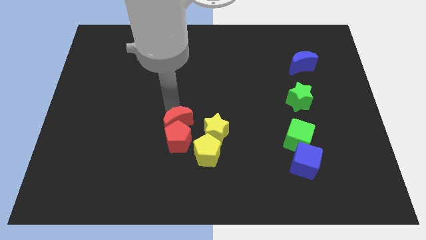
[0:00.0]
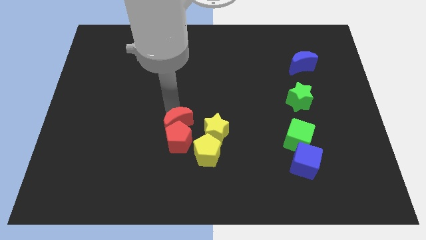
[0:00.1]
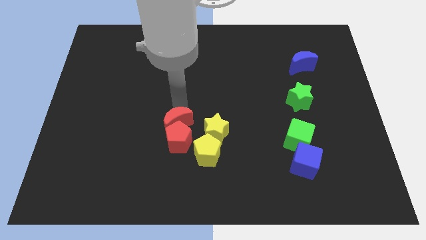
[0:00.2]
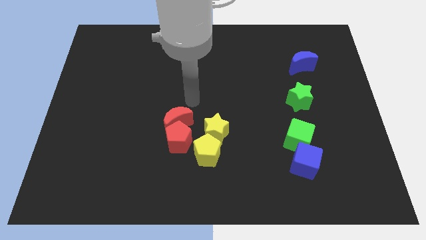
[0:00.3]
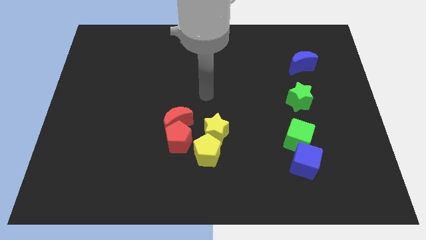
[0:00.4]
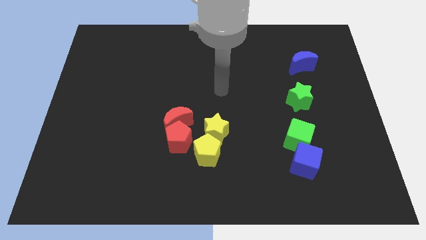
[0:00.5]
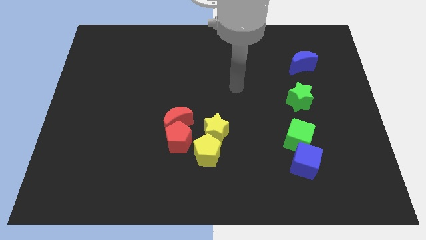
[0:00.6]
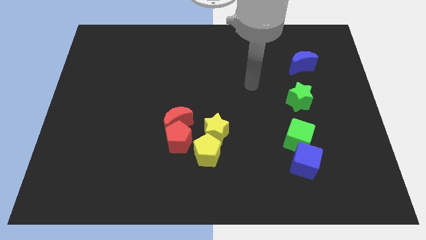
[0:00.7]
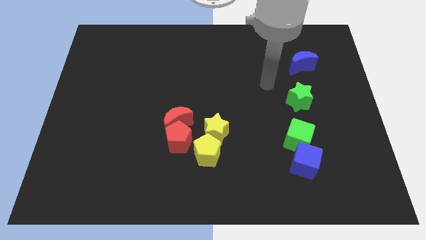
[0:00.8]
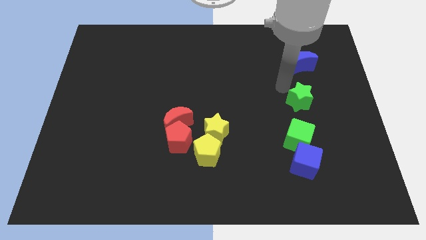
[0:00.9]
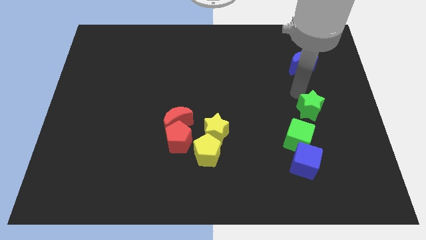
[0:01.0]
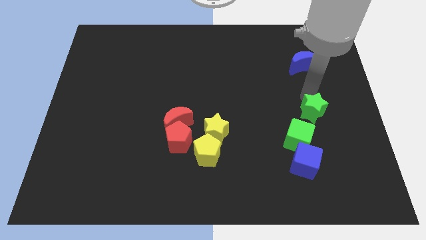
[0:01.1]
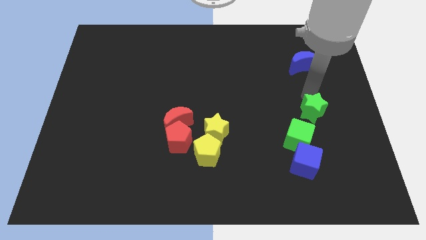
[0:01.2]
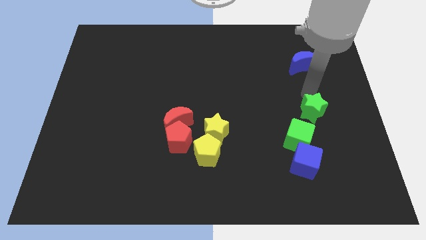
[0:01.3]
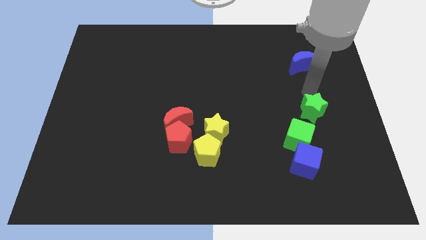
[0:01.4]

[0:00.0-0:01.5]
slightly push the green star to the bottom of the green cube

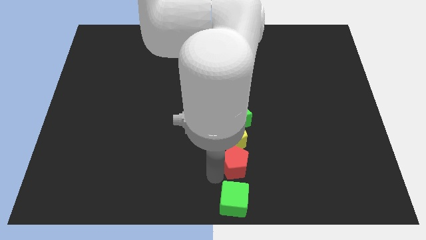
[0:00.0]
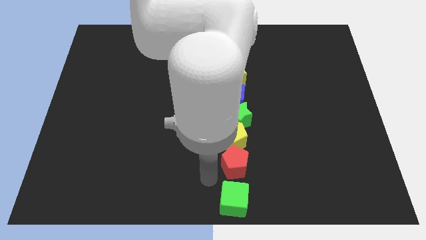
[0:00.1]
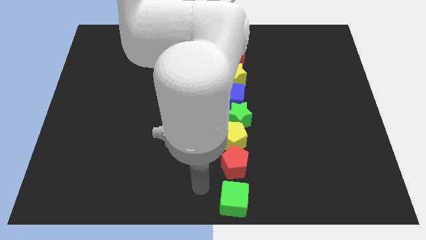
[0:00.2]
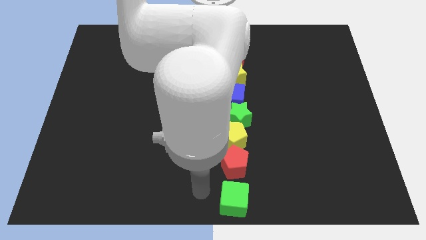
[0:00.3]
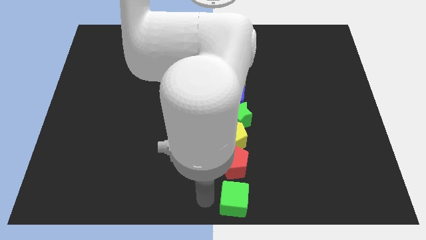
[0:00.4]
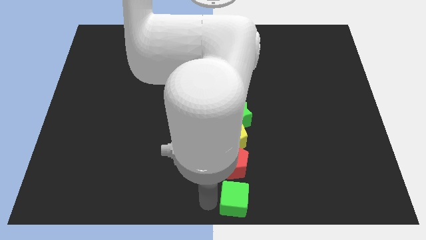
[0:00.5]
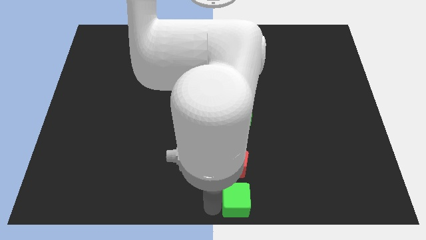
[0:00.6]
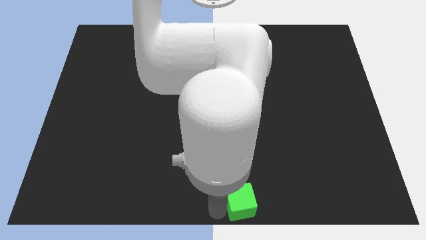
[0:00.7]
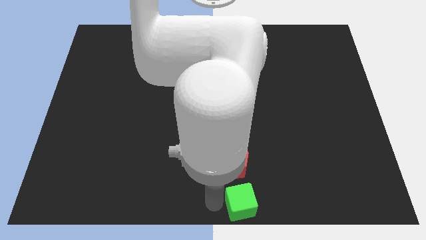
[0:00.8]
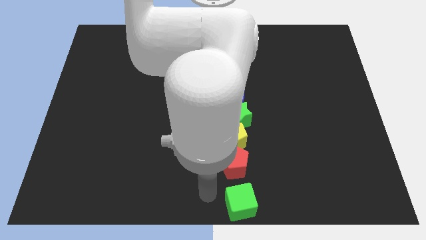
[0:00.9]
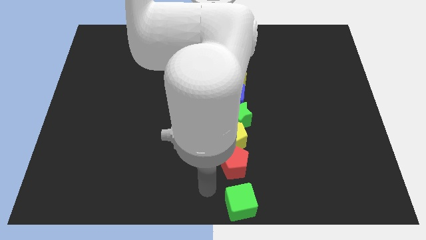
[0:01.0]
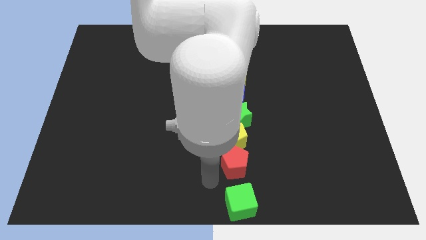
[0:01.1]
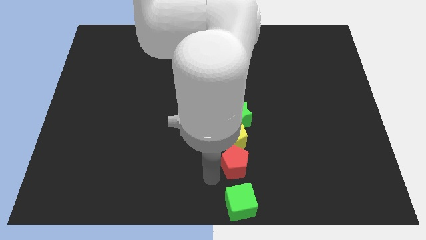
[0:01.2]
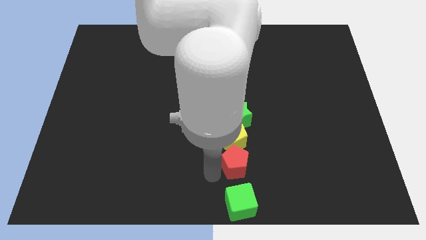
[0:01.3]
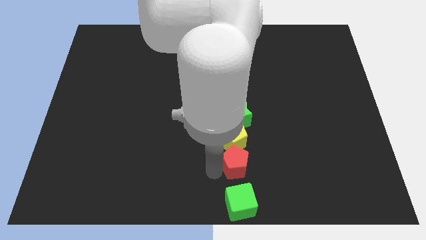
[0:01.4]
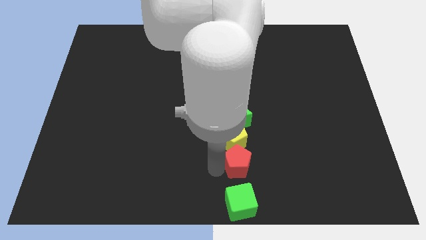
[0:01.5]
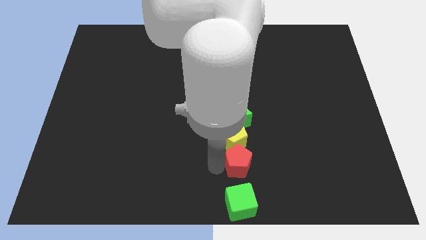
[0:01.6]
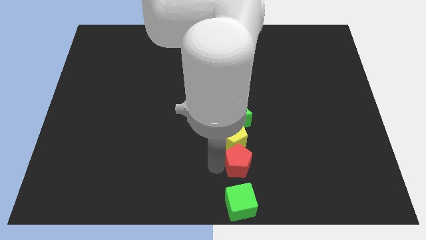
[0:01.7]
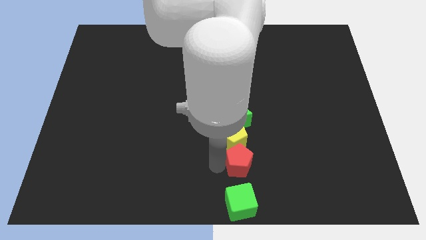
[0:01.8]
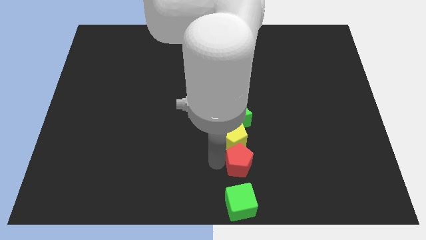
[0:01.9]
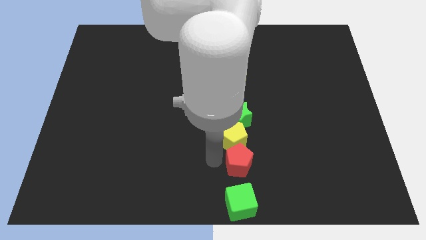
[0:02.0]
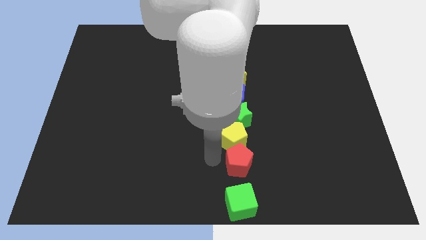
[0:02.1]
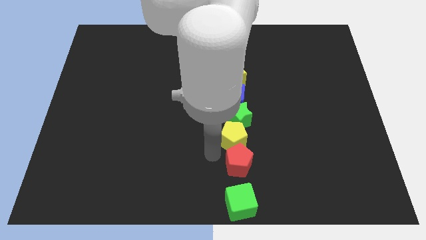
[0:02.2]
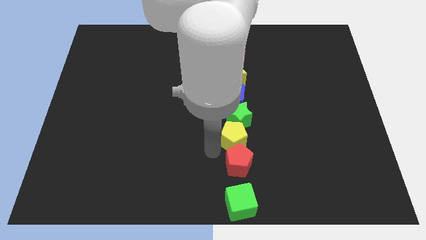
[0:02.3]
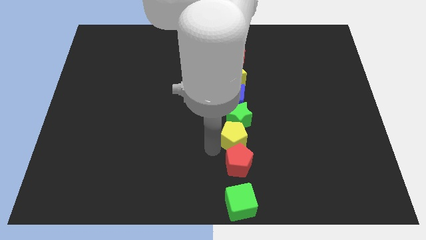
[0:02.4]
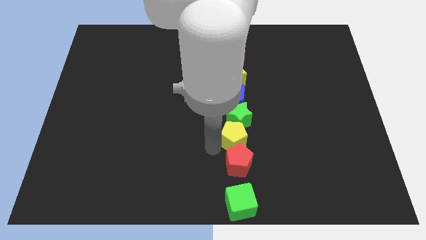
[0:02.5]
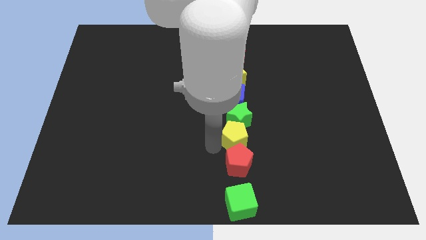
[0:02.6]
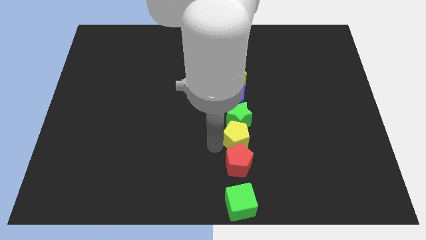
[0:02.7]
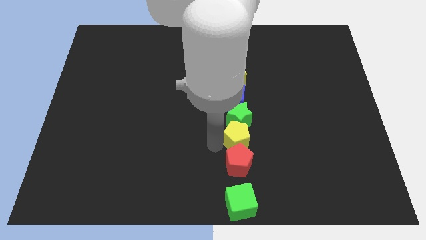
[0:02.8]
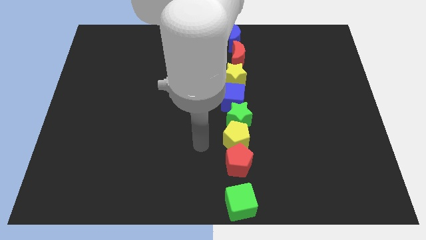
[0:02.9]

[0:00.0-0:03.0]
slightly push the red pentagon towards the right side

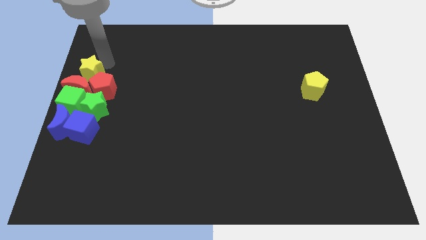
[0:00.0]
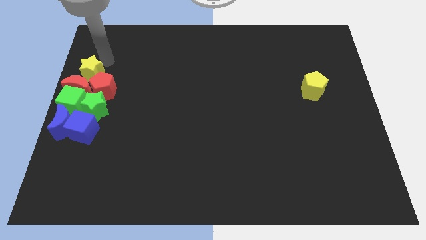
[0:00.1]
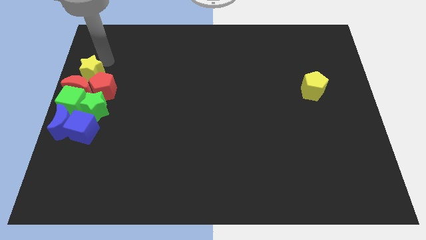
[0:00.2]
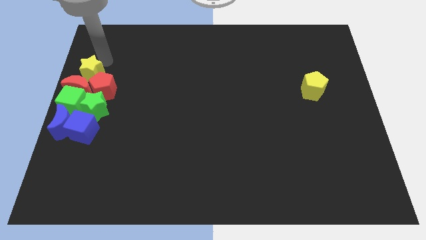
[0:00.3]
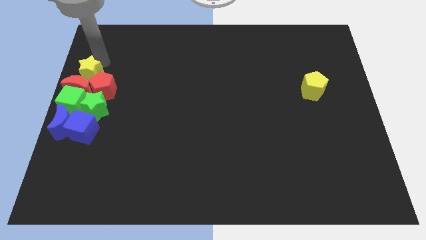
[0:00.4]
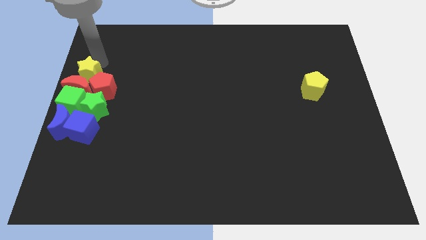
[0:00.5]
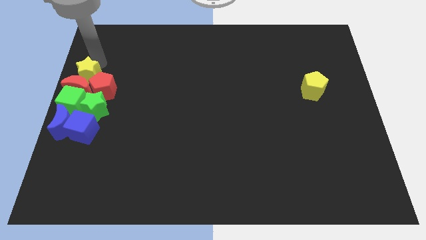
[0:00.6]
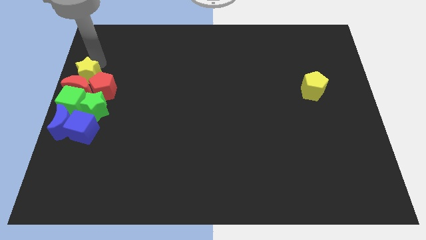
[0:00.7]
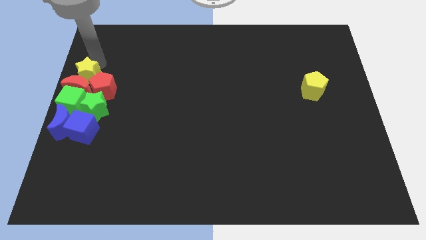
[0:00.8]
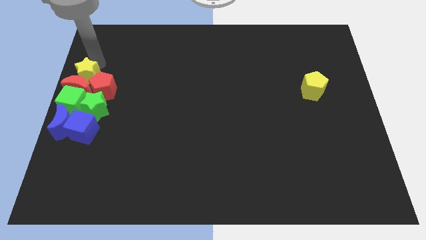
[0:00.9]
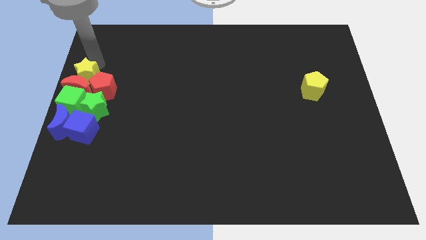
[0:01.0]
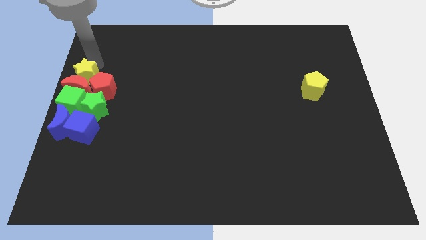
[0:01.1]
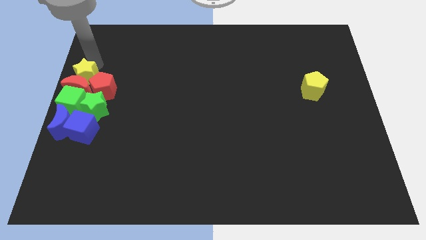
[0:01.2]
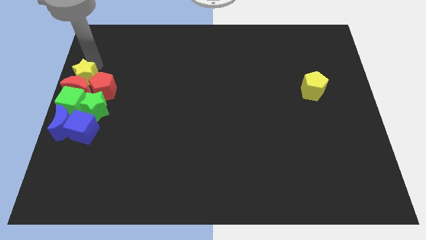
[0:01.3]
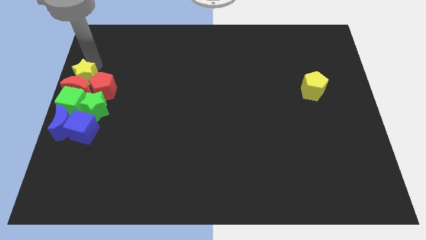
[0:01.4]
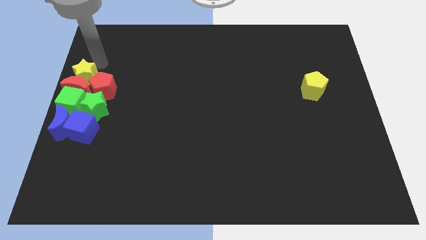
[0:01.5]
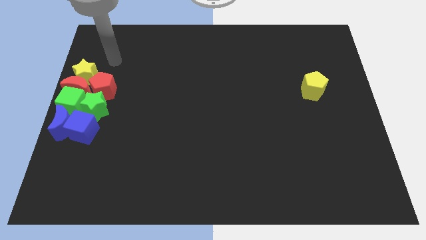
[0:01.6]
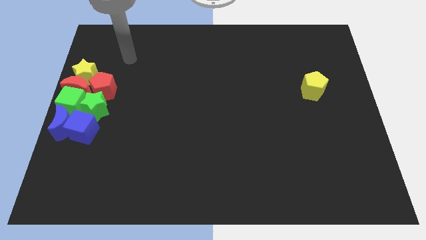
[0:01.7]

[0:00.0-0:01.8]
push the yellow star into the red moon

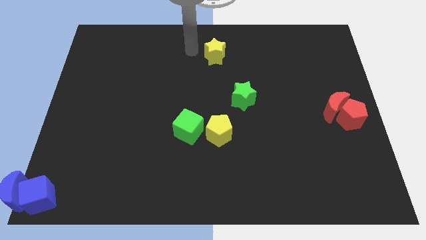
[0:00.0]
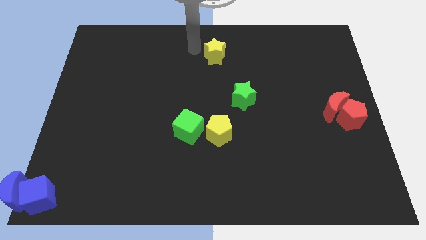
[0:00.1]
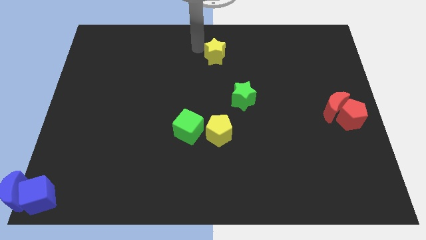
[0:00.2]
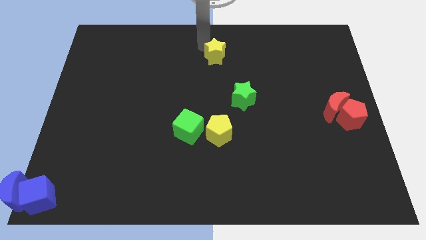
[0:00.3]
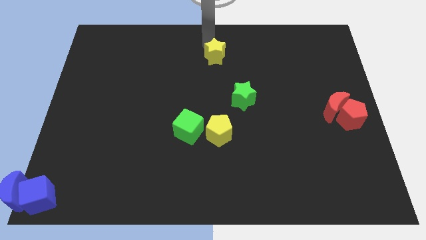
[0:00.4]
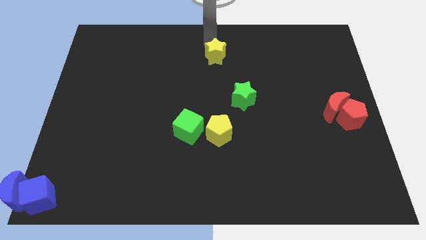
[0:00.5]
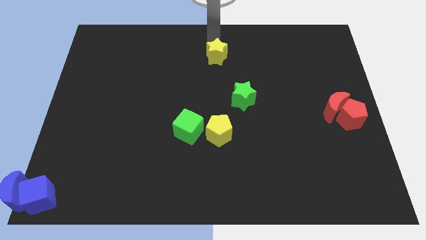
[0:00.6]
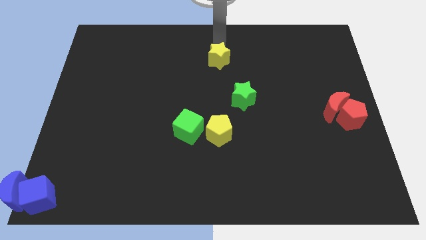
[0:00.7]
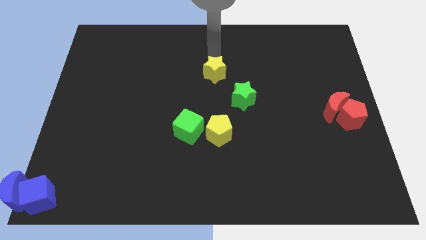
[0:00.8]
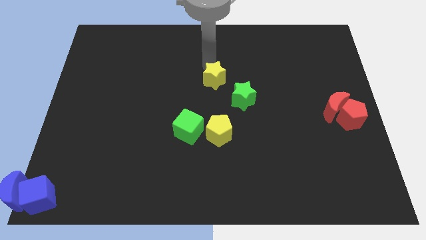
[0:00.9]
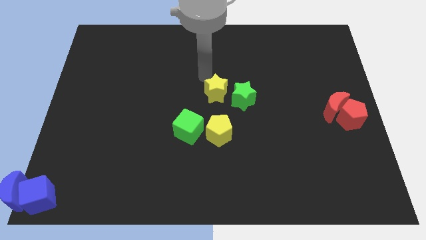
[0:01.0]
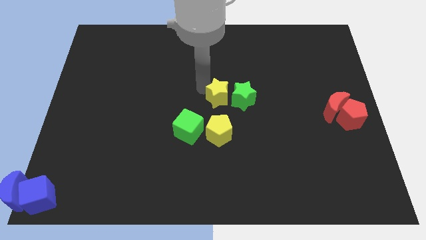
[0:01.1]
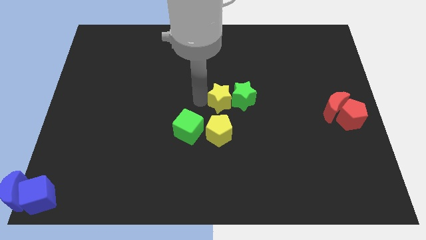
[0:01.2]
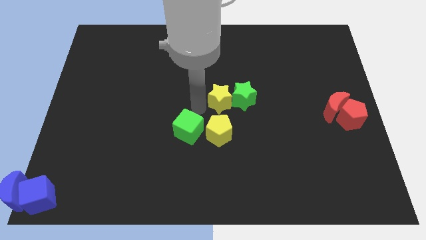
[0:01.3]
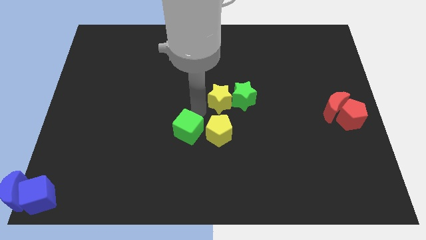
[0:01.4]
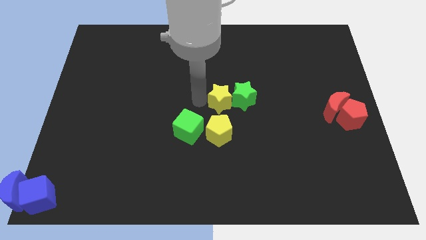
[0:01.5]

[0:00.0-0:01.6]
push the yellow star to the left side of the green star

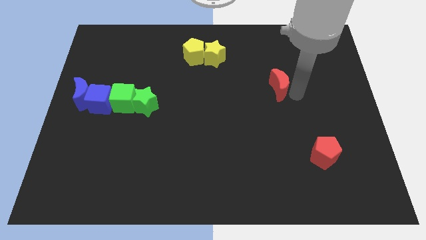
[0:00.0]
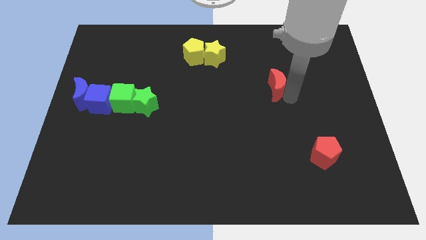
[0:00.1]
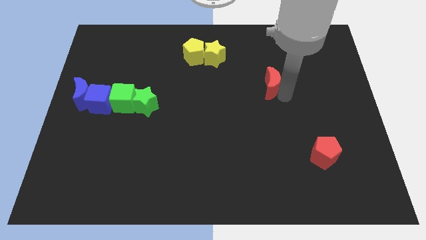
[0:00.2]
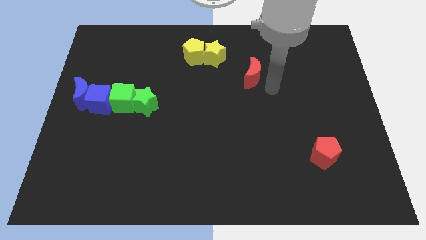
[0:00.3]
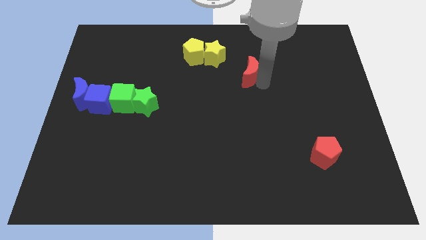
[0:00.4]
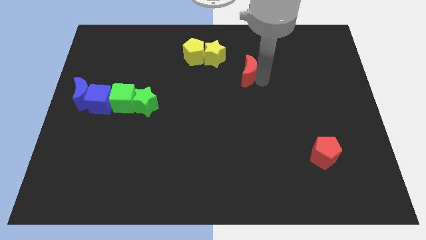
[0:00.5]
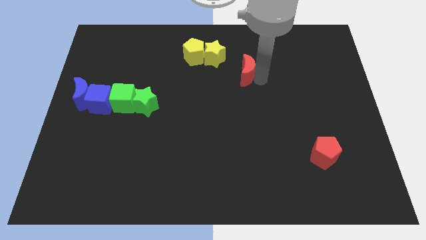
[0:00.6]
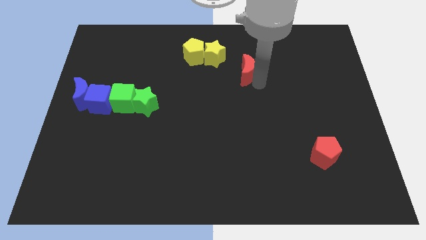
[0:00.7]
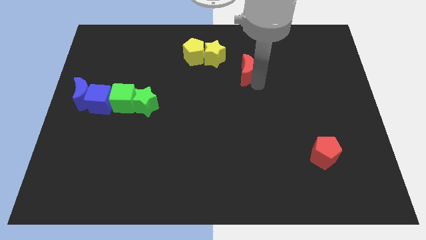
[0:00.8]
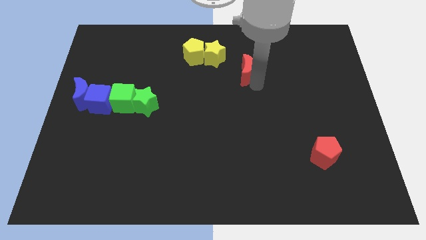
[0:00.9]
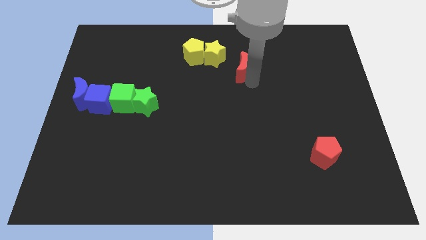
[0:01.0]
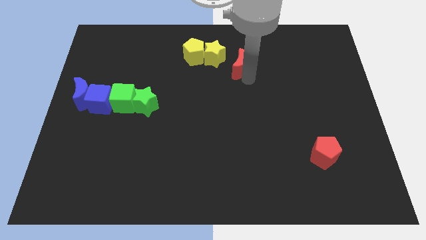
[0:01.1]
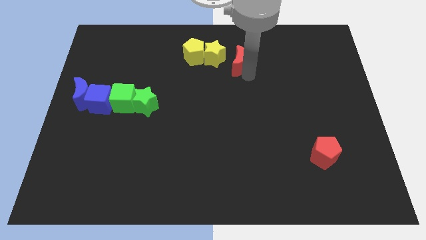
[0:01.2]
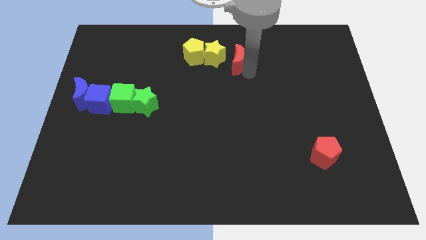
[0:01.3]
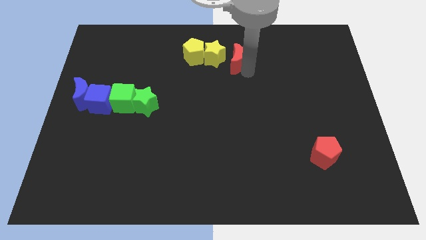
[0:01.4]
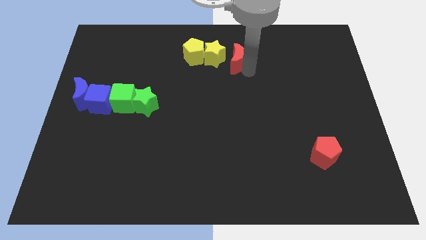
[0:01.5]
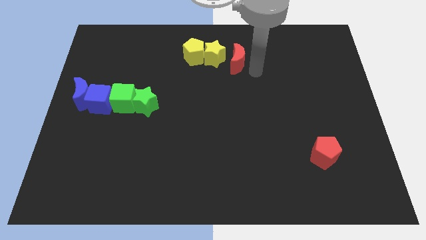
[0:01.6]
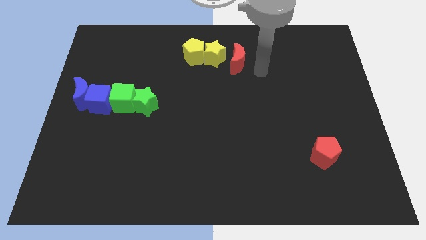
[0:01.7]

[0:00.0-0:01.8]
move the red crescent to the right of the yellow star
